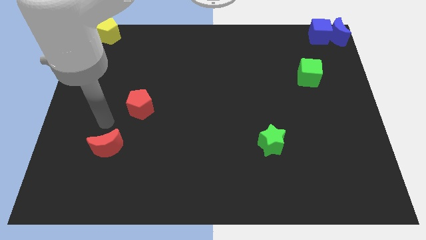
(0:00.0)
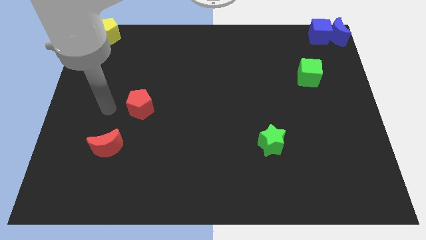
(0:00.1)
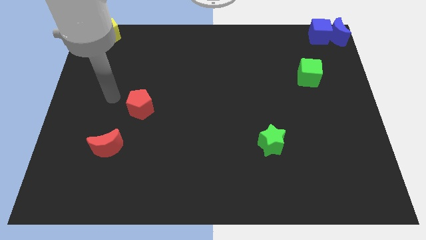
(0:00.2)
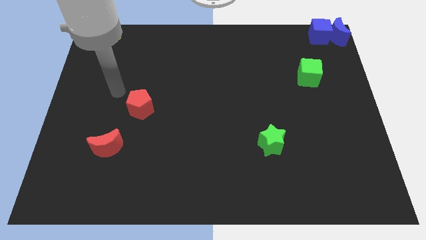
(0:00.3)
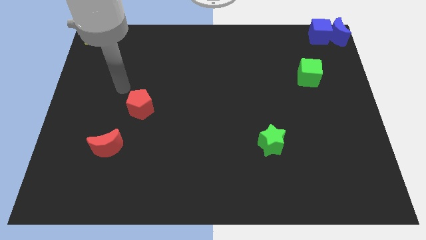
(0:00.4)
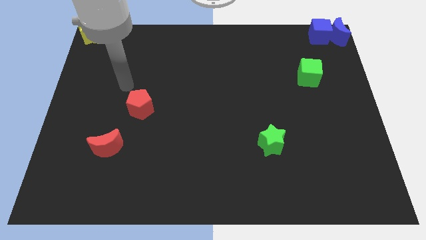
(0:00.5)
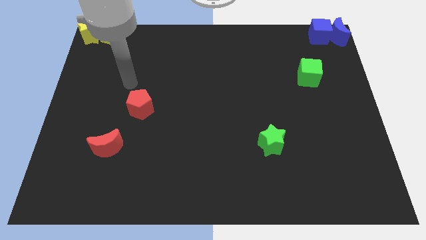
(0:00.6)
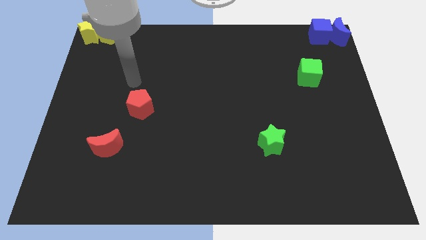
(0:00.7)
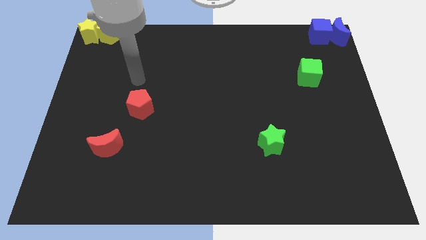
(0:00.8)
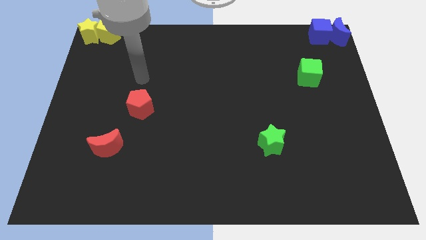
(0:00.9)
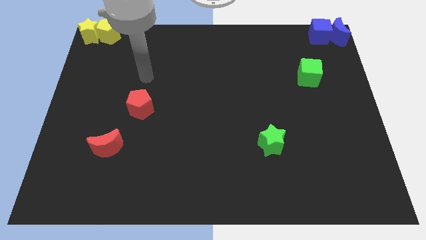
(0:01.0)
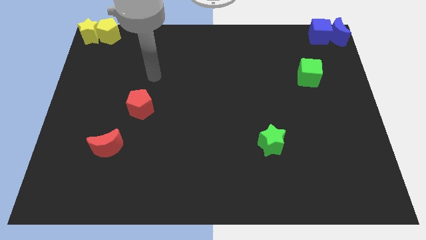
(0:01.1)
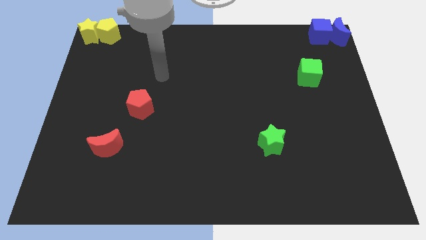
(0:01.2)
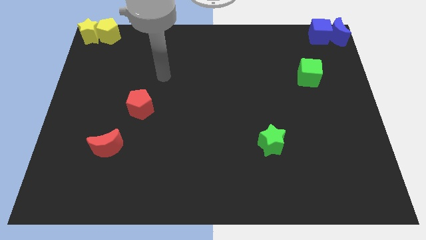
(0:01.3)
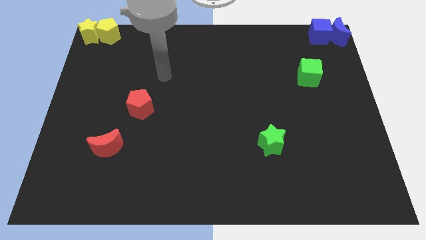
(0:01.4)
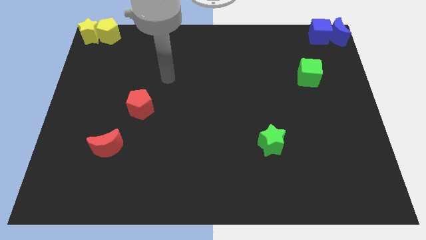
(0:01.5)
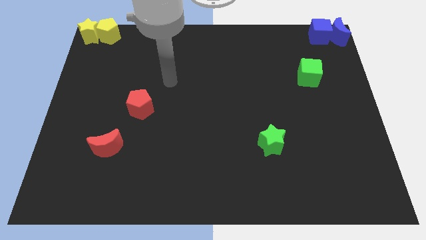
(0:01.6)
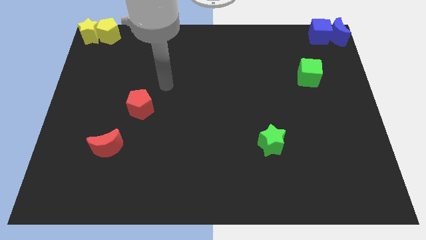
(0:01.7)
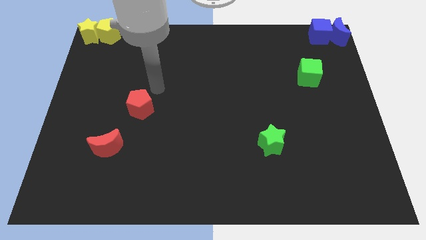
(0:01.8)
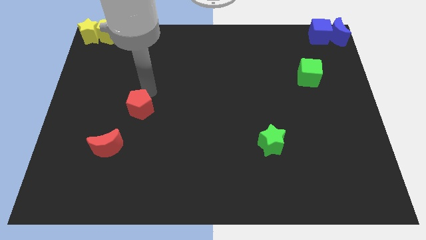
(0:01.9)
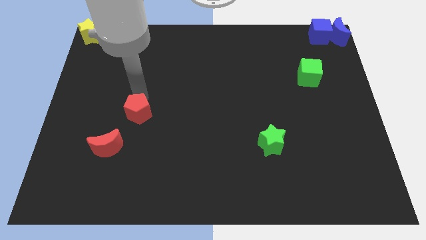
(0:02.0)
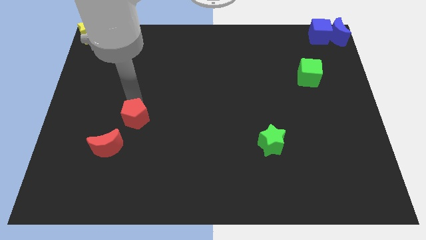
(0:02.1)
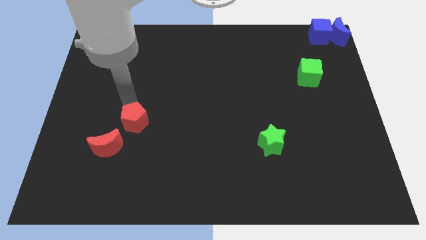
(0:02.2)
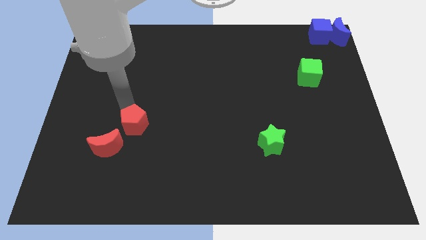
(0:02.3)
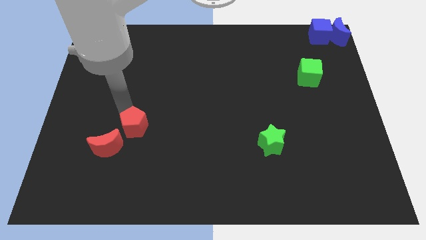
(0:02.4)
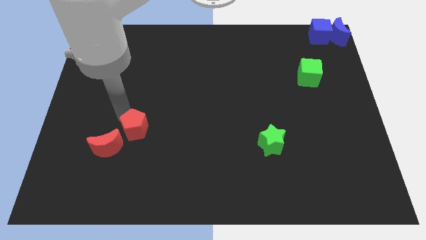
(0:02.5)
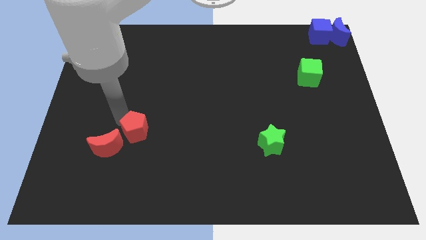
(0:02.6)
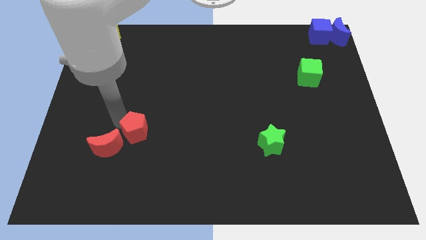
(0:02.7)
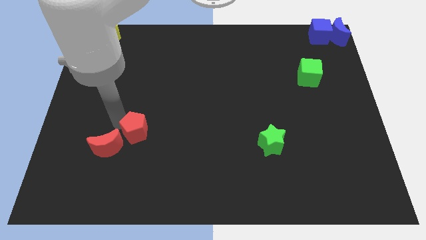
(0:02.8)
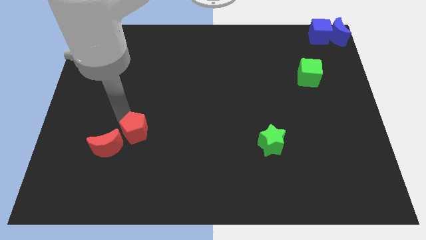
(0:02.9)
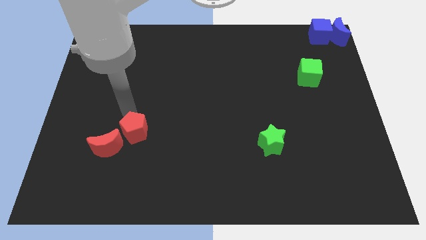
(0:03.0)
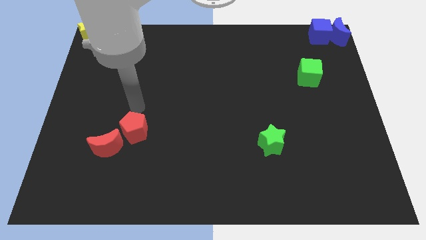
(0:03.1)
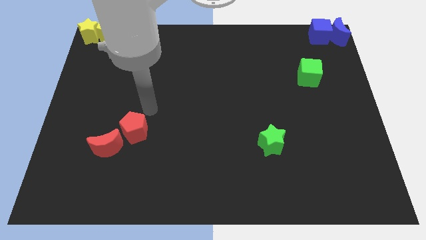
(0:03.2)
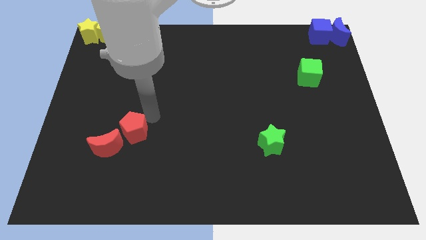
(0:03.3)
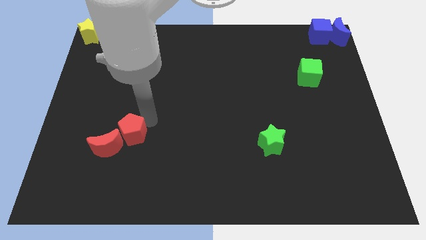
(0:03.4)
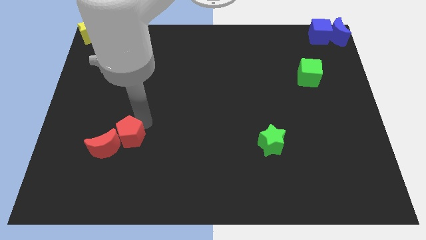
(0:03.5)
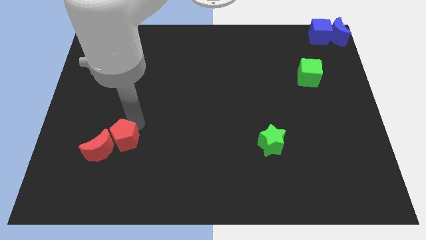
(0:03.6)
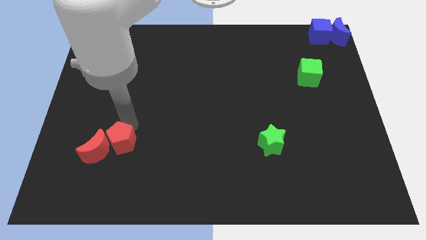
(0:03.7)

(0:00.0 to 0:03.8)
push the red pentagon right to the red crescent

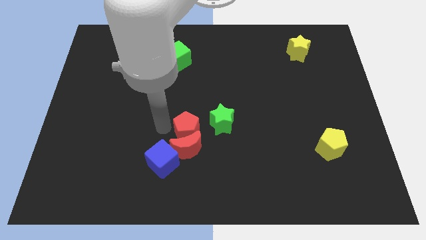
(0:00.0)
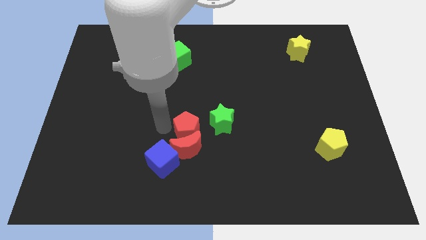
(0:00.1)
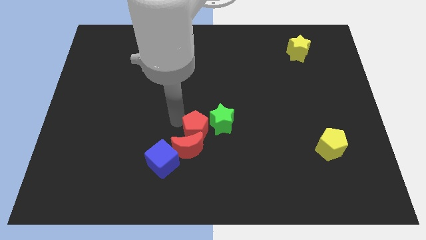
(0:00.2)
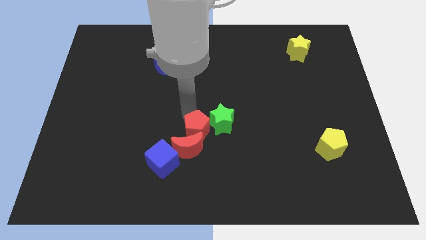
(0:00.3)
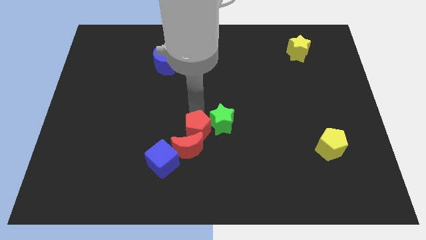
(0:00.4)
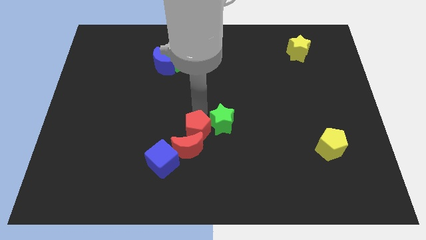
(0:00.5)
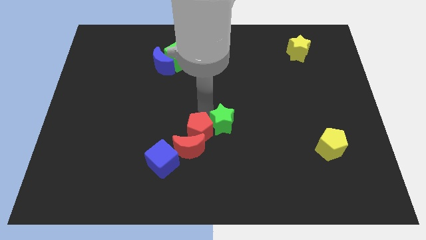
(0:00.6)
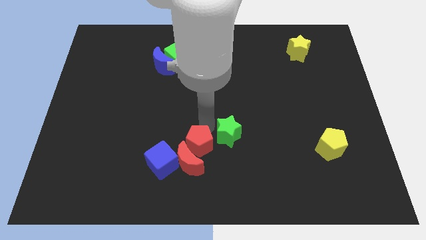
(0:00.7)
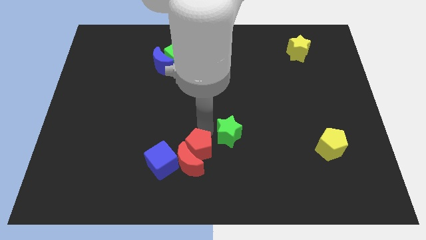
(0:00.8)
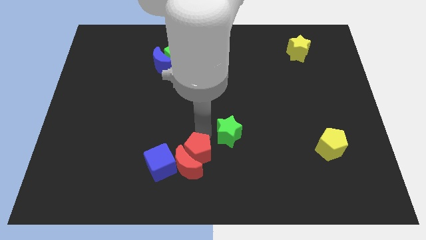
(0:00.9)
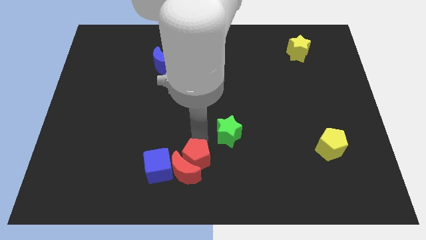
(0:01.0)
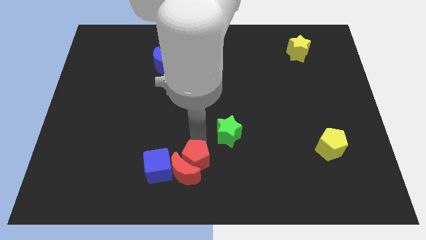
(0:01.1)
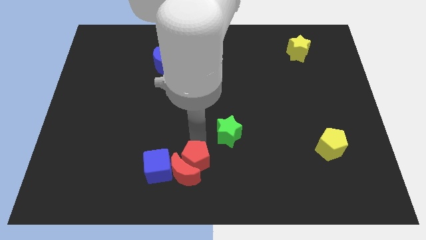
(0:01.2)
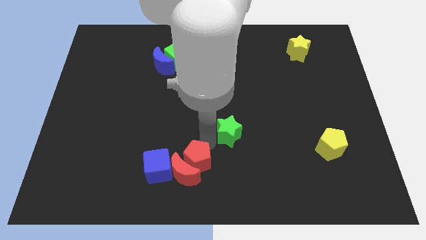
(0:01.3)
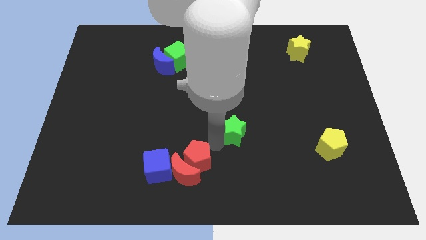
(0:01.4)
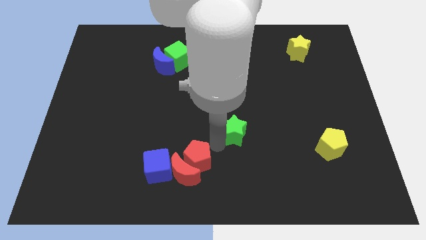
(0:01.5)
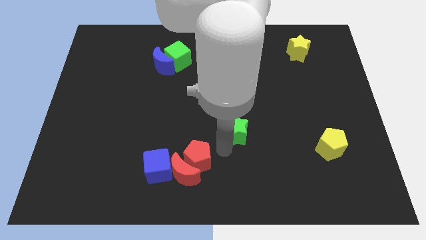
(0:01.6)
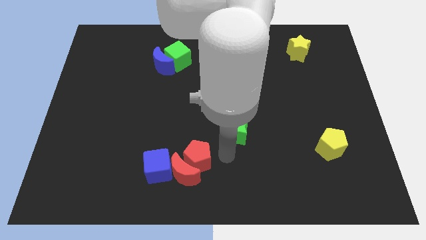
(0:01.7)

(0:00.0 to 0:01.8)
move the red pentagon along with the red moon slightly down

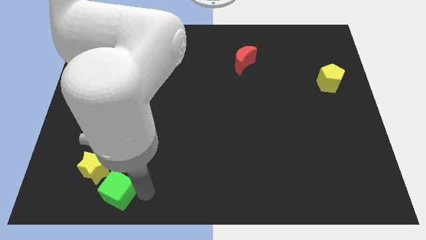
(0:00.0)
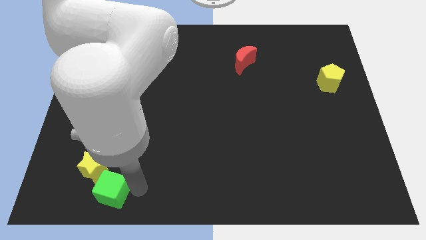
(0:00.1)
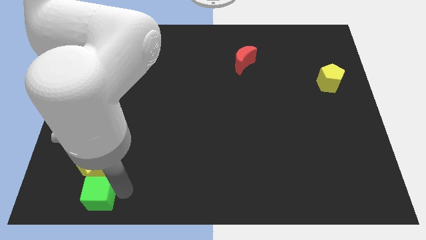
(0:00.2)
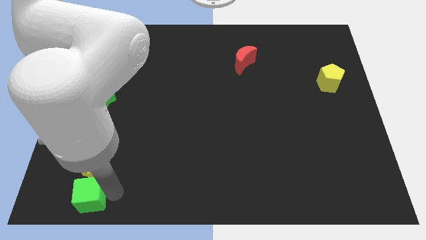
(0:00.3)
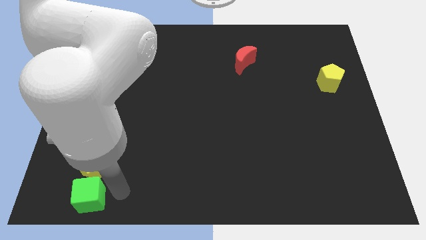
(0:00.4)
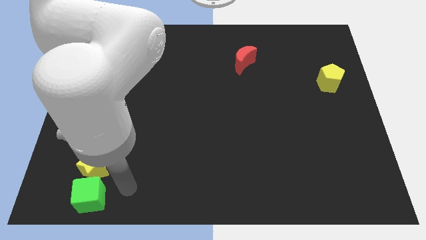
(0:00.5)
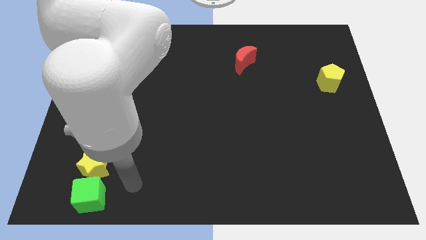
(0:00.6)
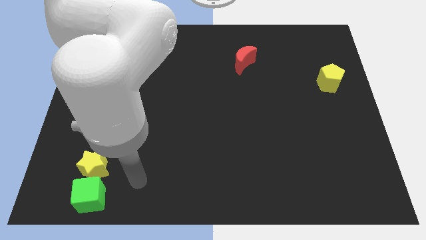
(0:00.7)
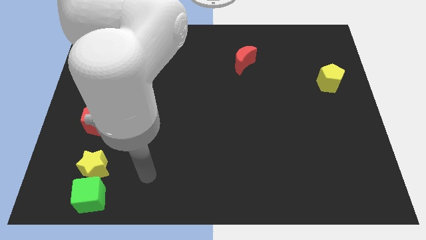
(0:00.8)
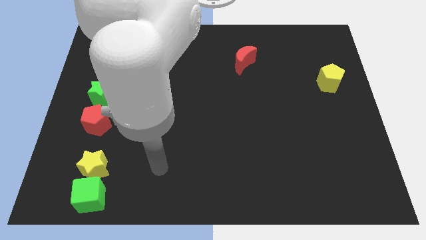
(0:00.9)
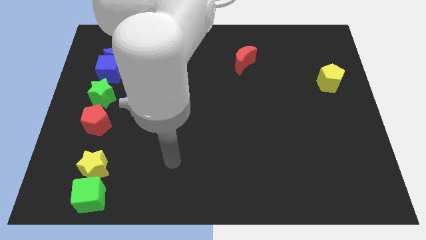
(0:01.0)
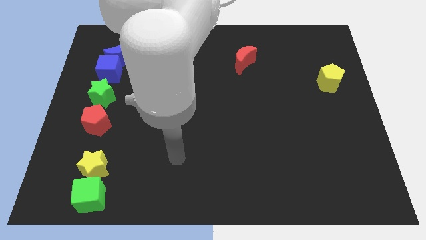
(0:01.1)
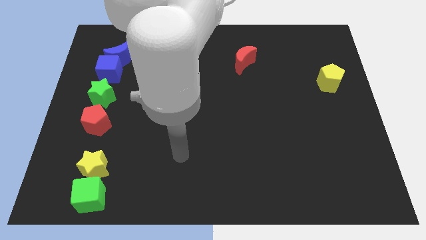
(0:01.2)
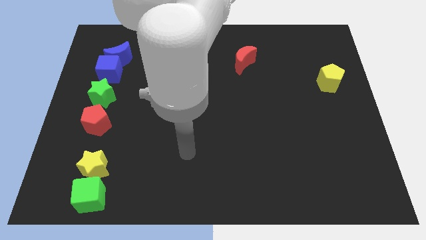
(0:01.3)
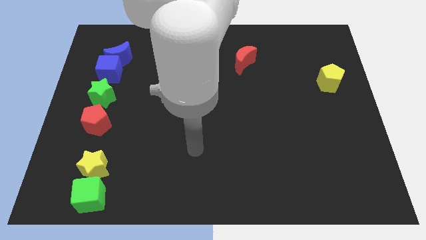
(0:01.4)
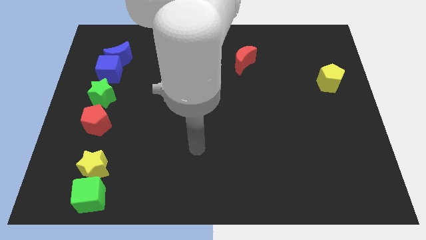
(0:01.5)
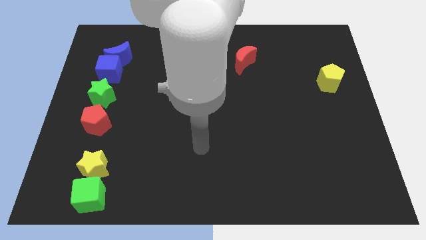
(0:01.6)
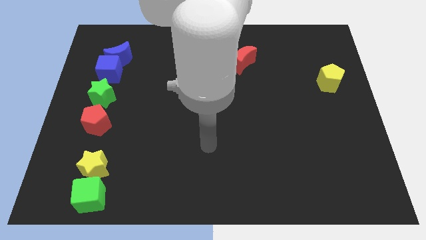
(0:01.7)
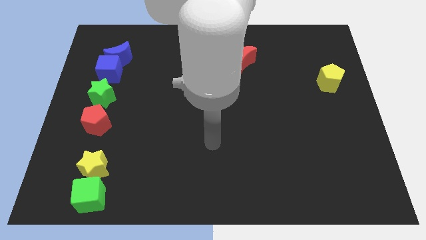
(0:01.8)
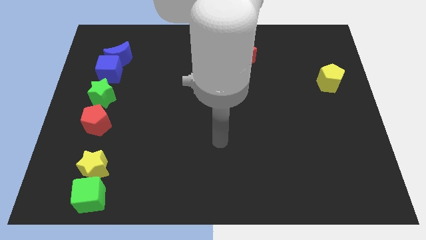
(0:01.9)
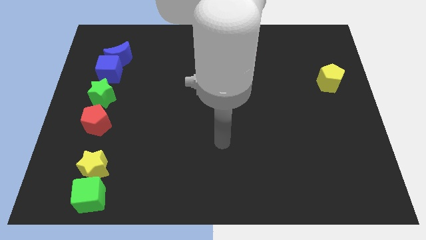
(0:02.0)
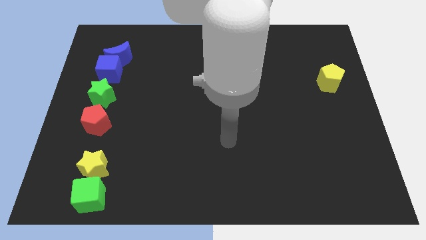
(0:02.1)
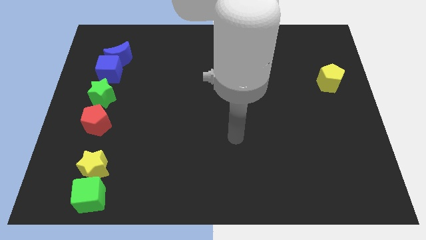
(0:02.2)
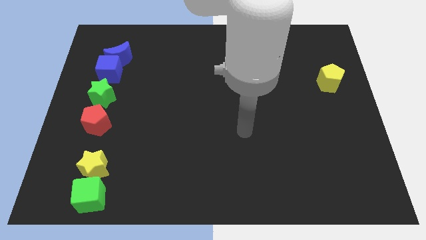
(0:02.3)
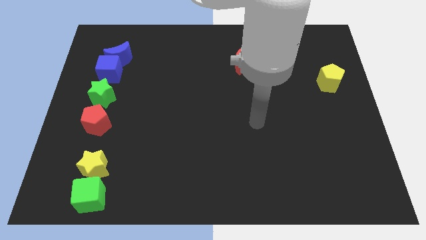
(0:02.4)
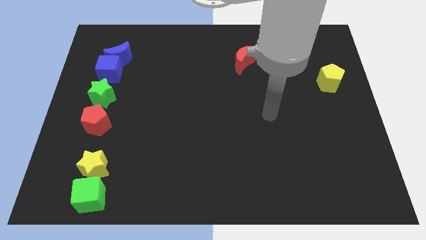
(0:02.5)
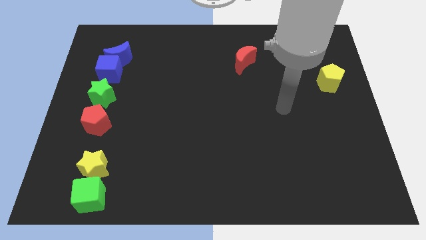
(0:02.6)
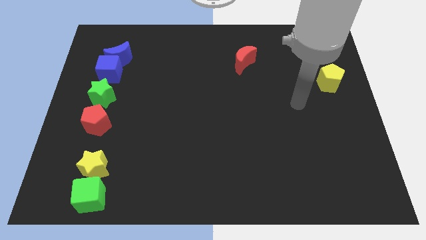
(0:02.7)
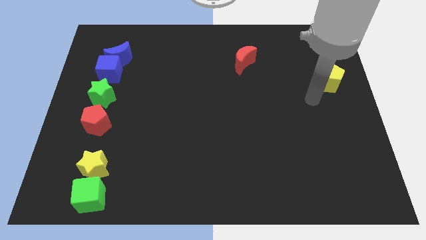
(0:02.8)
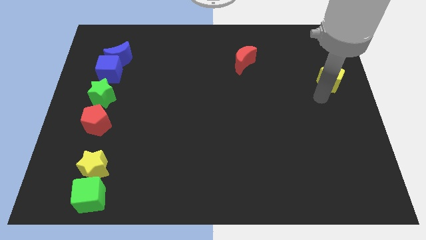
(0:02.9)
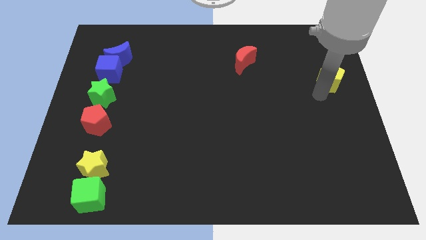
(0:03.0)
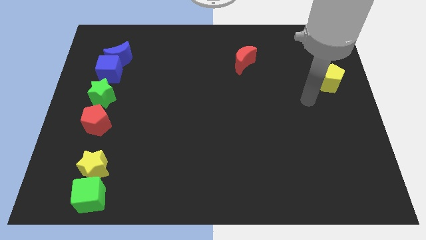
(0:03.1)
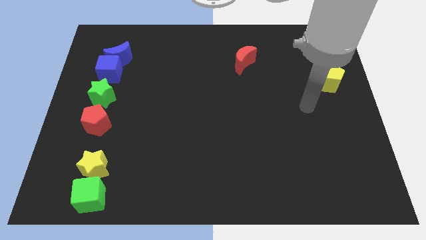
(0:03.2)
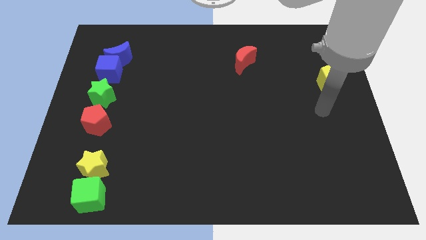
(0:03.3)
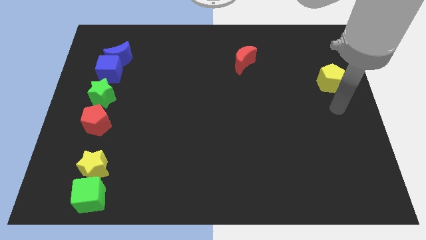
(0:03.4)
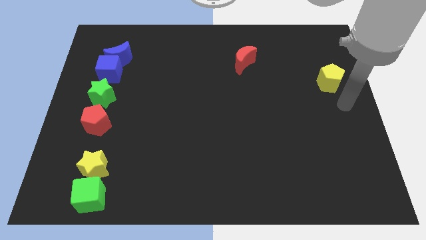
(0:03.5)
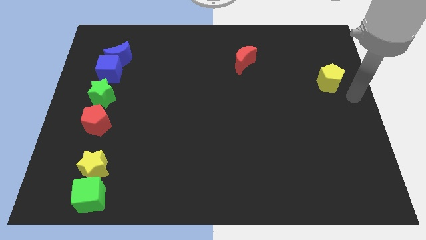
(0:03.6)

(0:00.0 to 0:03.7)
move your arm away from the green cube
